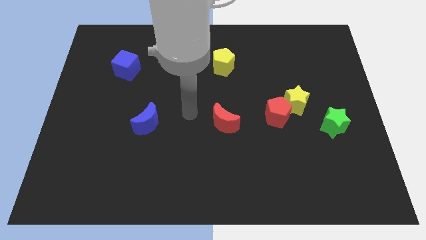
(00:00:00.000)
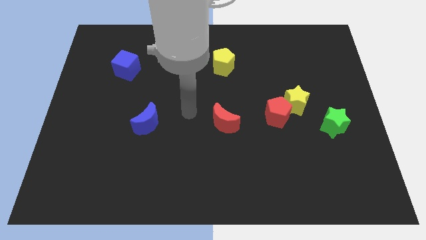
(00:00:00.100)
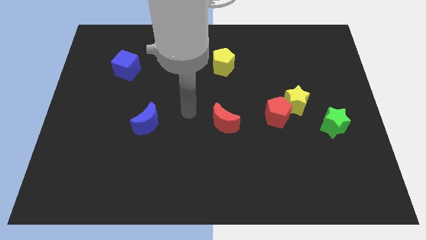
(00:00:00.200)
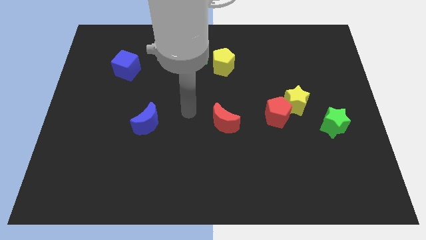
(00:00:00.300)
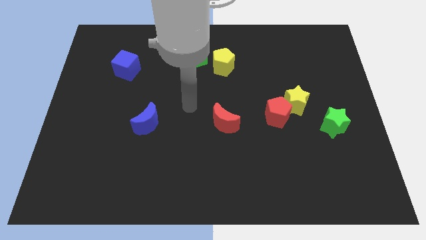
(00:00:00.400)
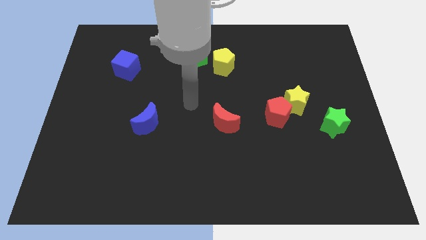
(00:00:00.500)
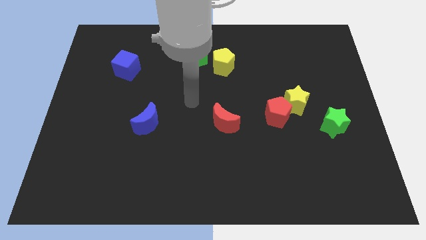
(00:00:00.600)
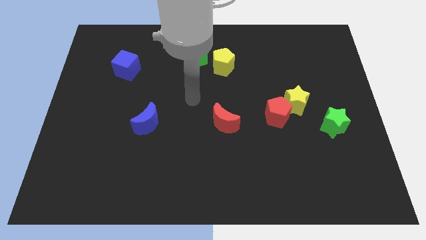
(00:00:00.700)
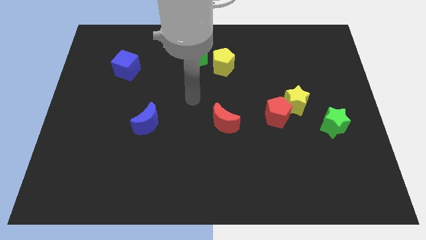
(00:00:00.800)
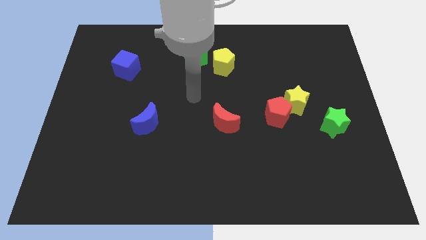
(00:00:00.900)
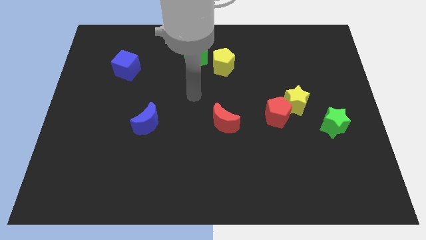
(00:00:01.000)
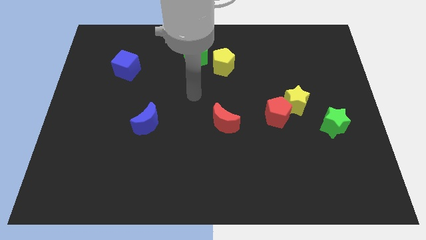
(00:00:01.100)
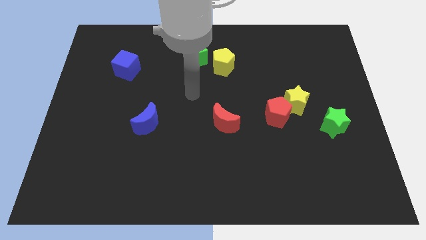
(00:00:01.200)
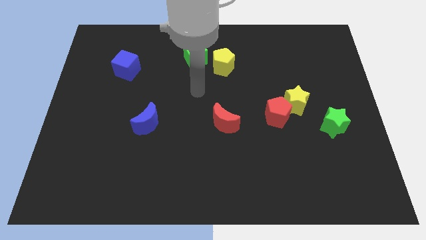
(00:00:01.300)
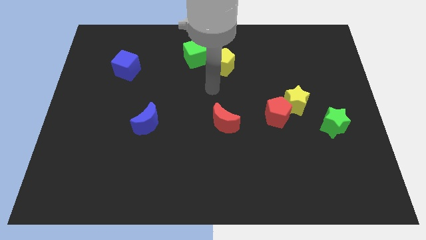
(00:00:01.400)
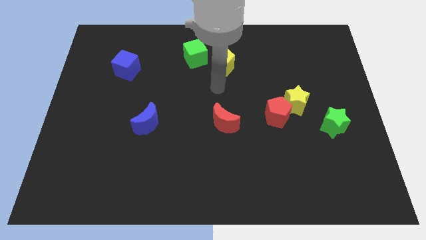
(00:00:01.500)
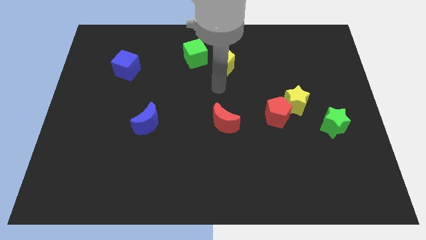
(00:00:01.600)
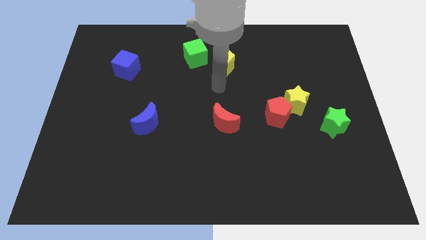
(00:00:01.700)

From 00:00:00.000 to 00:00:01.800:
place your hand in between yellow pentagon and red crescent

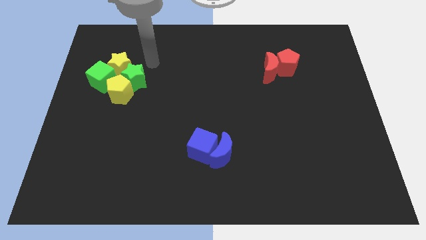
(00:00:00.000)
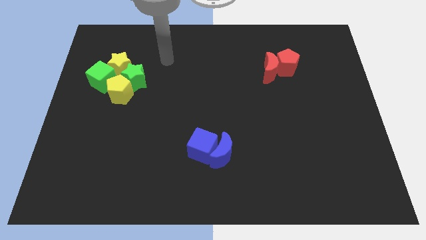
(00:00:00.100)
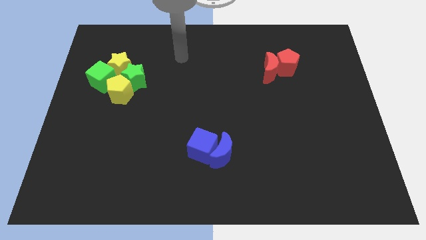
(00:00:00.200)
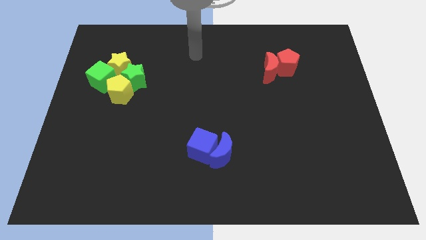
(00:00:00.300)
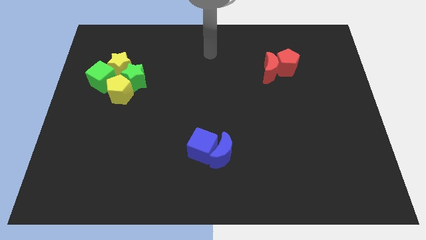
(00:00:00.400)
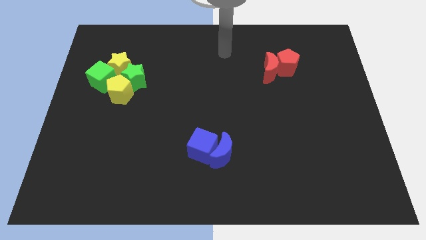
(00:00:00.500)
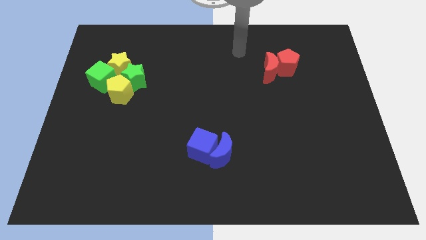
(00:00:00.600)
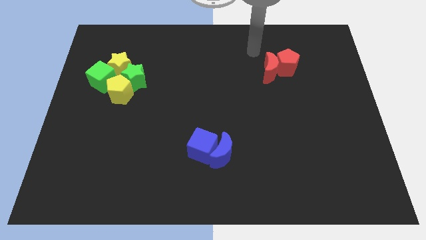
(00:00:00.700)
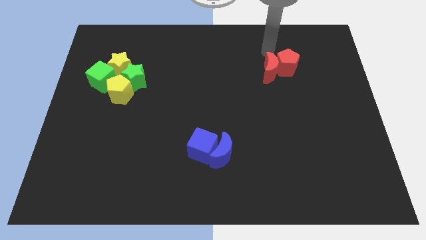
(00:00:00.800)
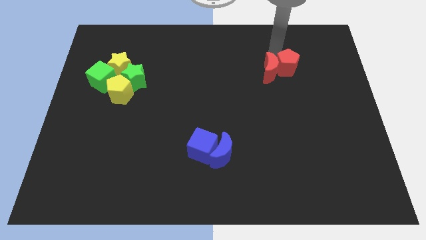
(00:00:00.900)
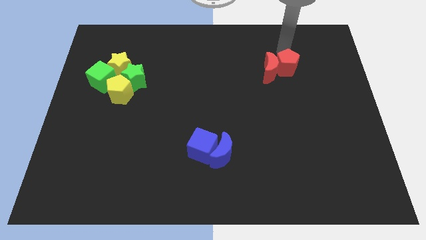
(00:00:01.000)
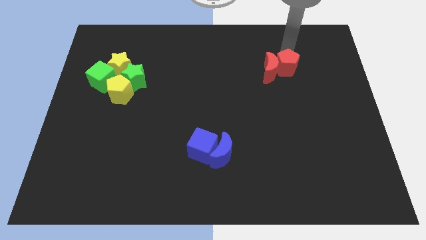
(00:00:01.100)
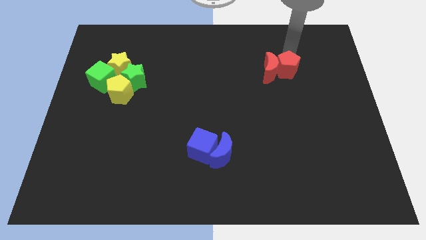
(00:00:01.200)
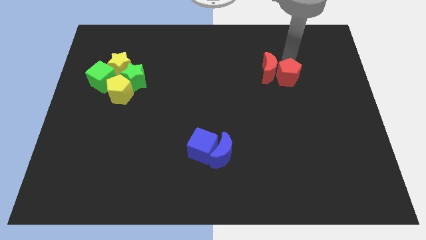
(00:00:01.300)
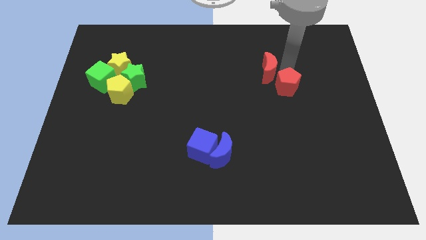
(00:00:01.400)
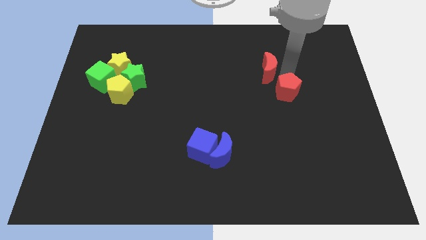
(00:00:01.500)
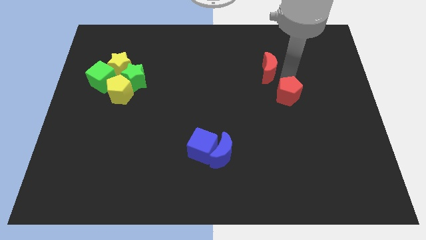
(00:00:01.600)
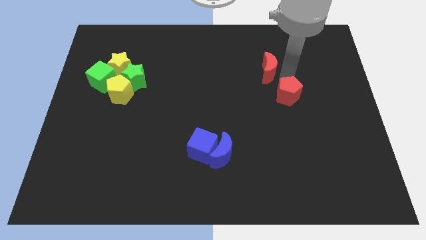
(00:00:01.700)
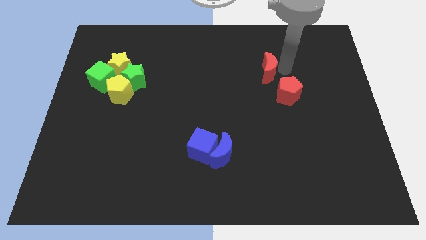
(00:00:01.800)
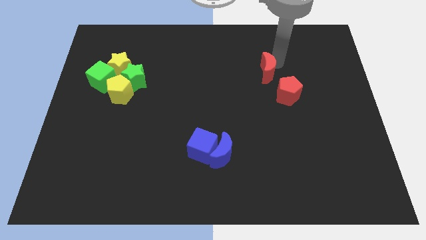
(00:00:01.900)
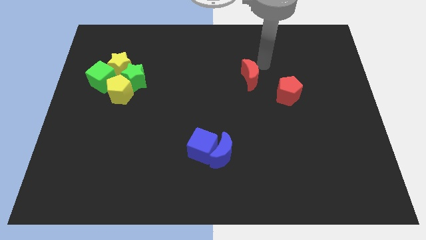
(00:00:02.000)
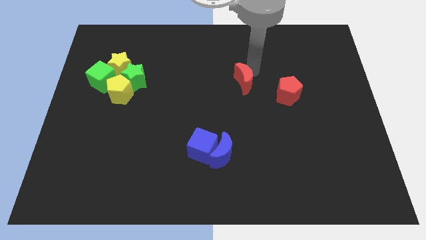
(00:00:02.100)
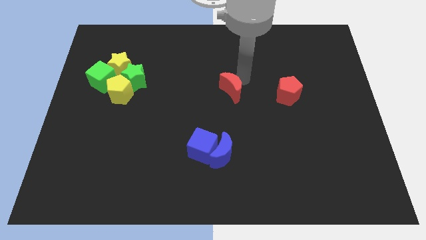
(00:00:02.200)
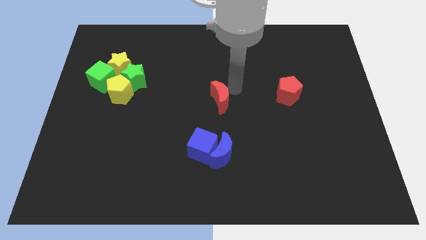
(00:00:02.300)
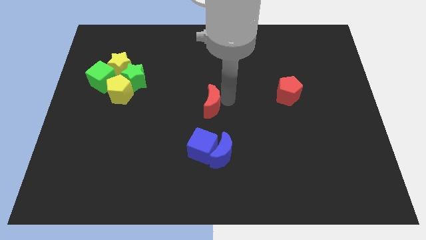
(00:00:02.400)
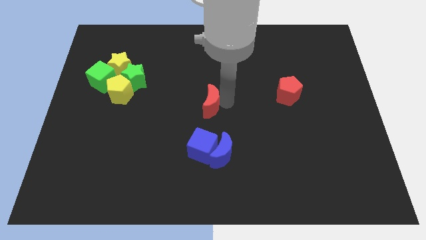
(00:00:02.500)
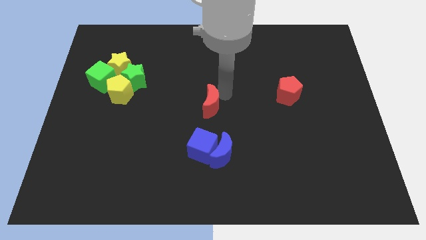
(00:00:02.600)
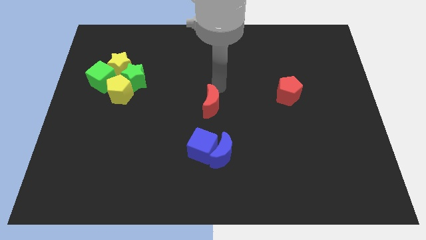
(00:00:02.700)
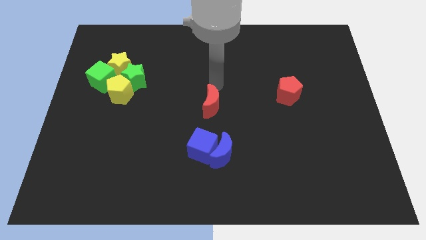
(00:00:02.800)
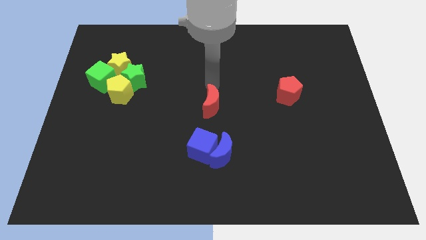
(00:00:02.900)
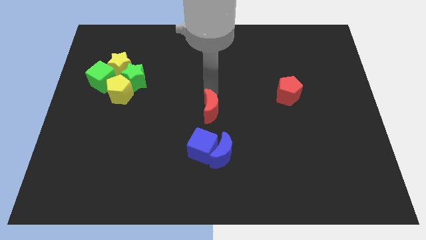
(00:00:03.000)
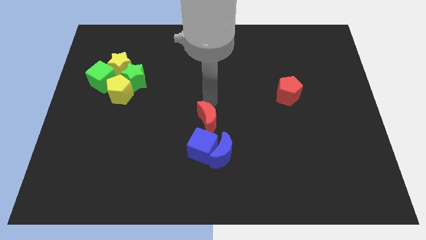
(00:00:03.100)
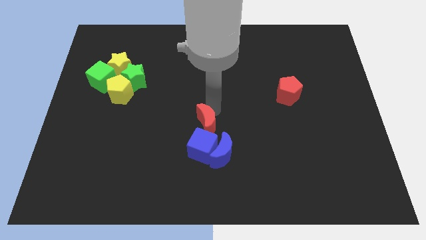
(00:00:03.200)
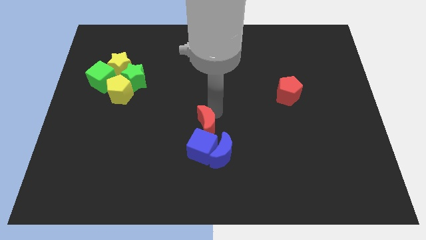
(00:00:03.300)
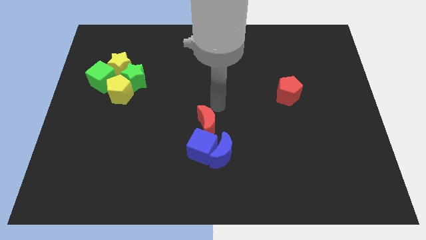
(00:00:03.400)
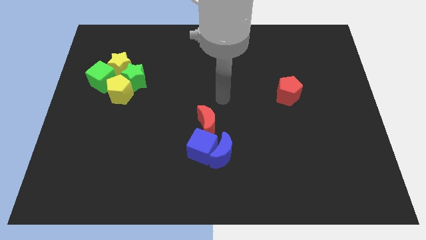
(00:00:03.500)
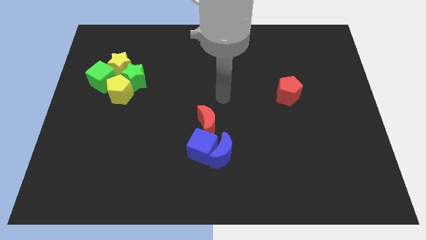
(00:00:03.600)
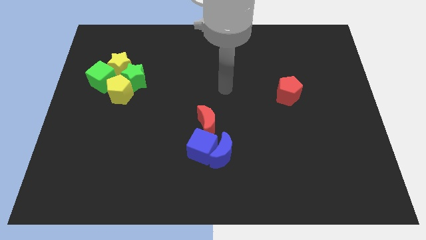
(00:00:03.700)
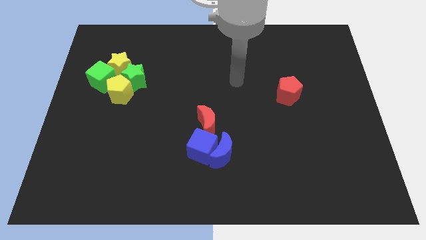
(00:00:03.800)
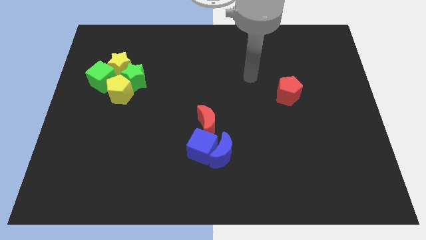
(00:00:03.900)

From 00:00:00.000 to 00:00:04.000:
put the red crescent at the top of the blue cube

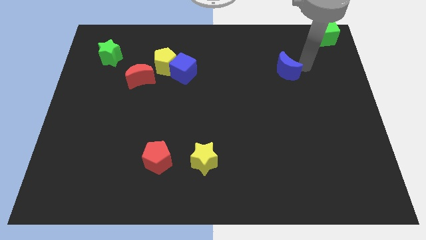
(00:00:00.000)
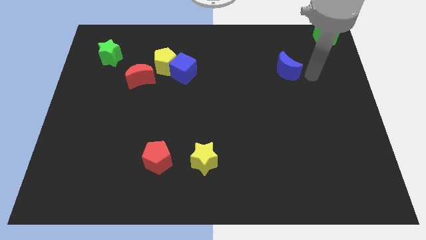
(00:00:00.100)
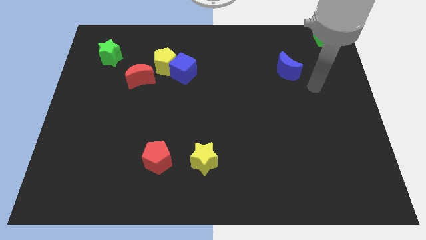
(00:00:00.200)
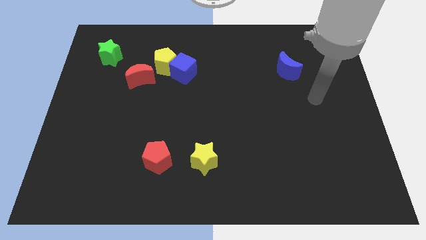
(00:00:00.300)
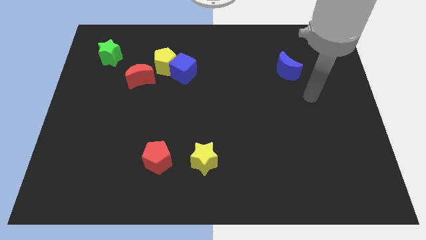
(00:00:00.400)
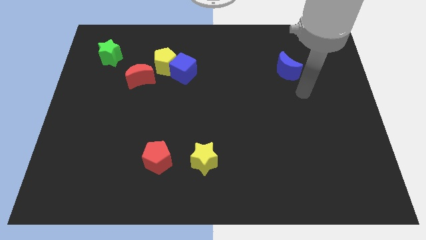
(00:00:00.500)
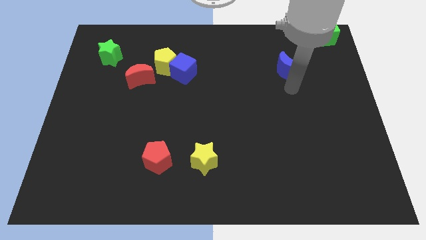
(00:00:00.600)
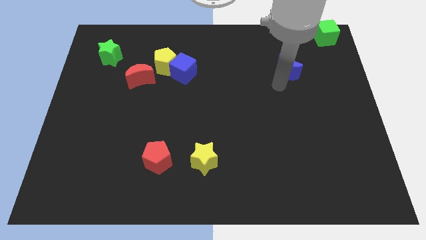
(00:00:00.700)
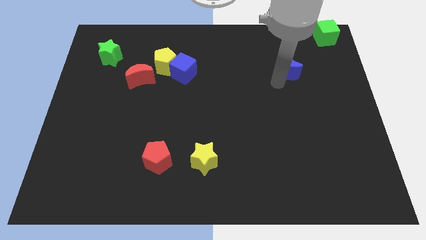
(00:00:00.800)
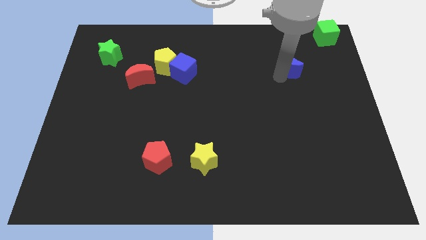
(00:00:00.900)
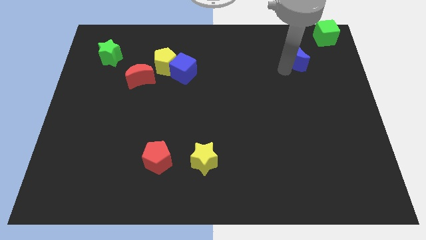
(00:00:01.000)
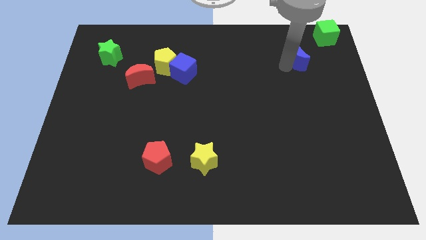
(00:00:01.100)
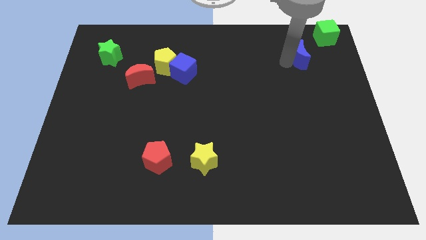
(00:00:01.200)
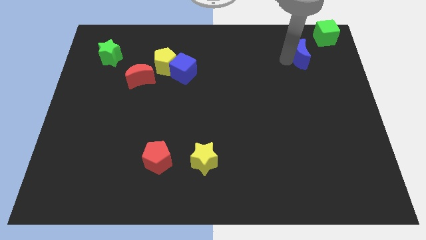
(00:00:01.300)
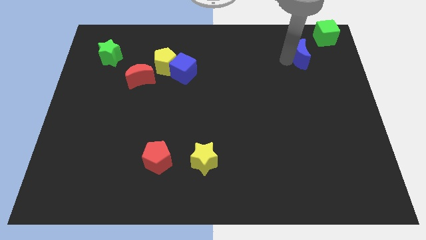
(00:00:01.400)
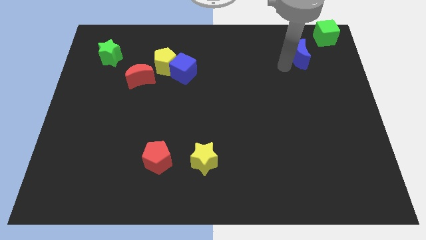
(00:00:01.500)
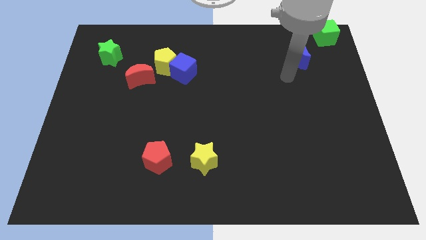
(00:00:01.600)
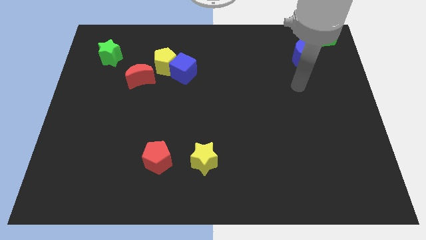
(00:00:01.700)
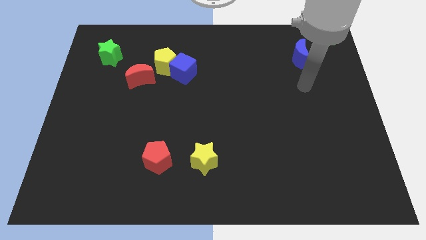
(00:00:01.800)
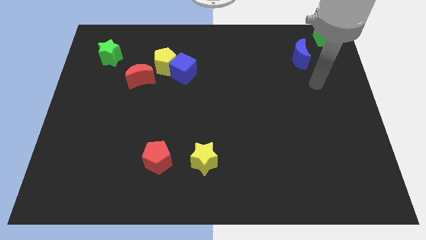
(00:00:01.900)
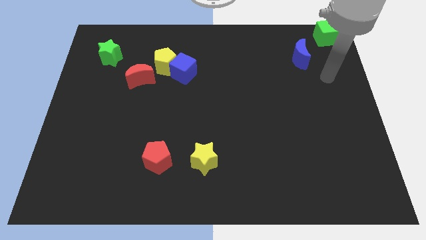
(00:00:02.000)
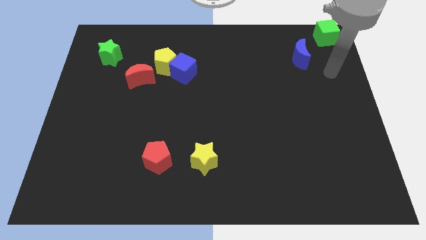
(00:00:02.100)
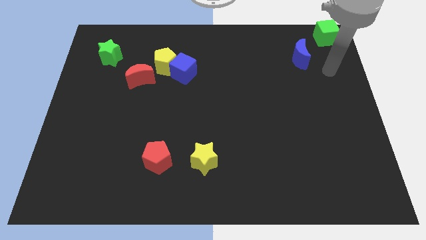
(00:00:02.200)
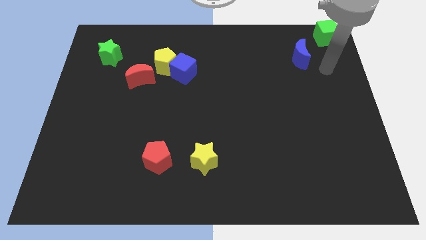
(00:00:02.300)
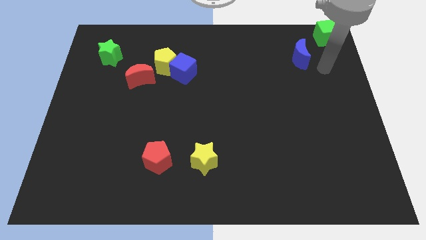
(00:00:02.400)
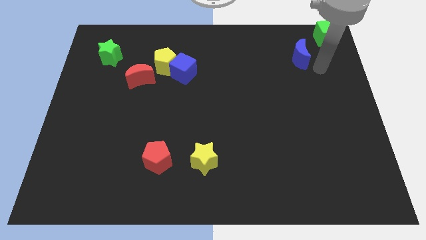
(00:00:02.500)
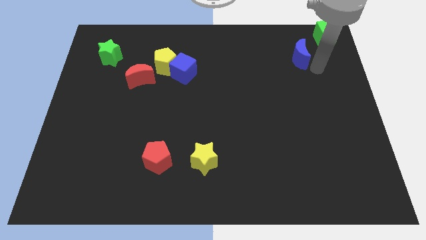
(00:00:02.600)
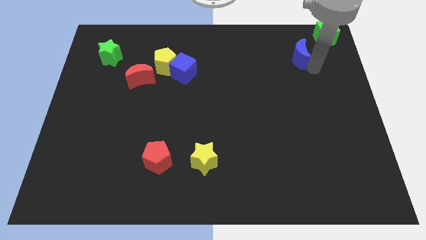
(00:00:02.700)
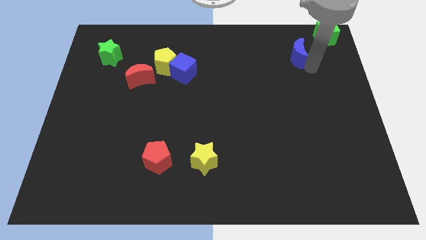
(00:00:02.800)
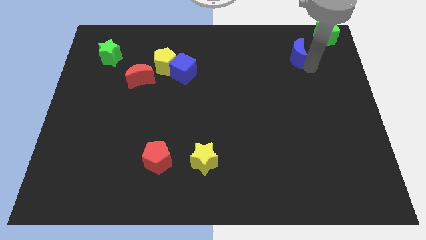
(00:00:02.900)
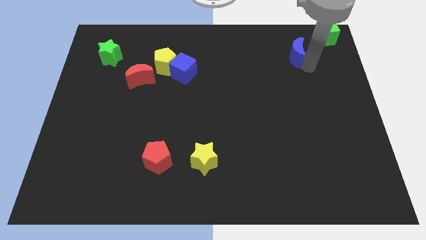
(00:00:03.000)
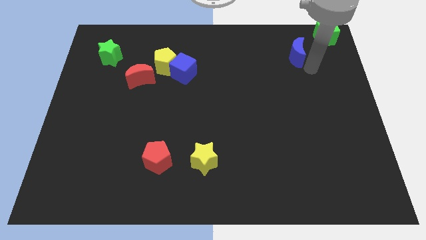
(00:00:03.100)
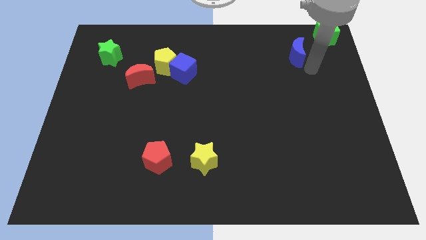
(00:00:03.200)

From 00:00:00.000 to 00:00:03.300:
place the blue crescent diagonally in between the green cube and red pentagon
